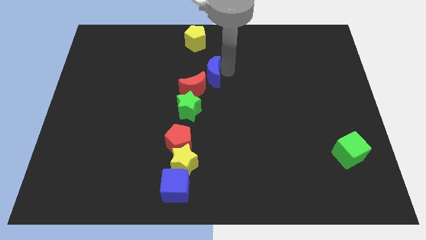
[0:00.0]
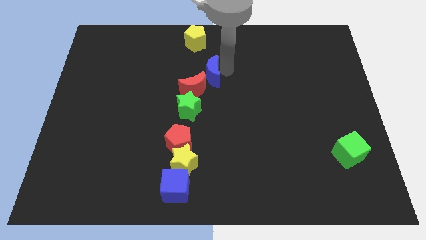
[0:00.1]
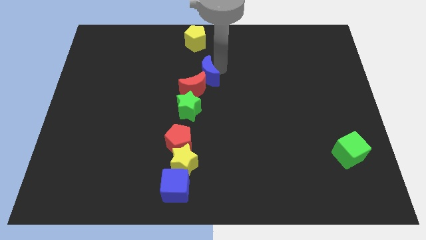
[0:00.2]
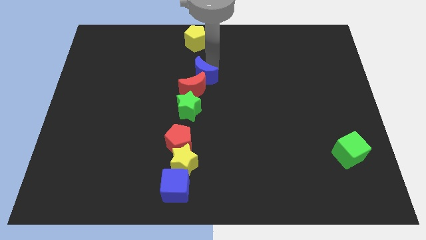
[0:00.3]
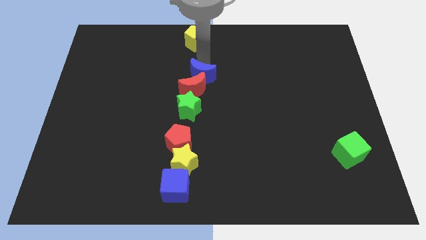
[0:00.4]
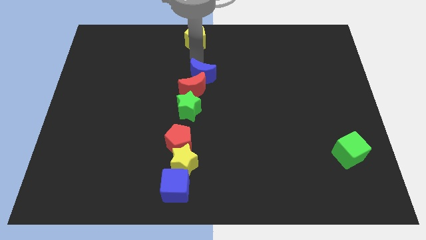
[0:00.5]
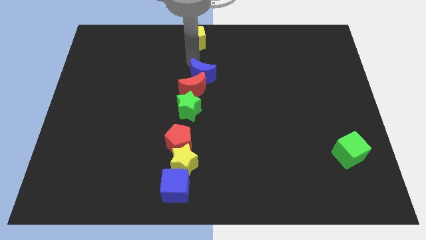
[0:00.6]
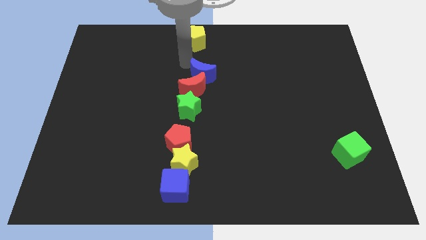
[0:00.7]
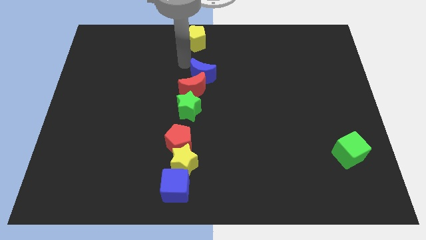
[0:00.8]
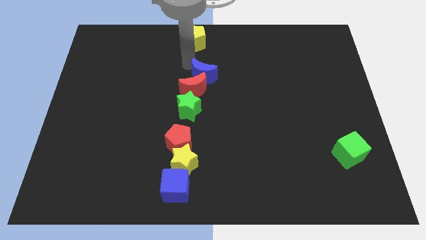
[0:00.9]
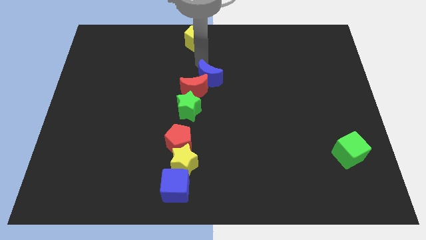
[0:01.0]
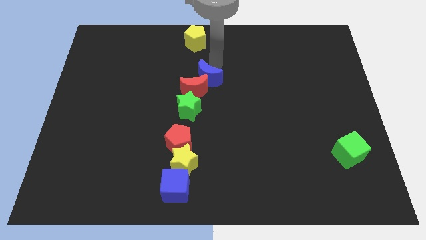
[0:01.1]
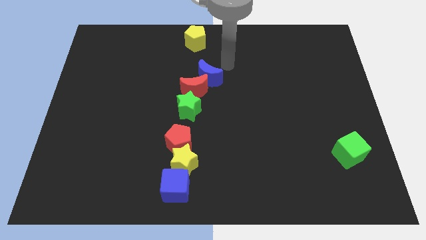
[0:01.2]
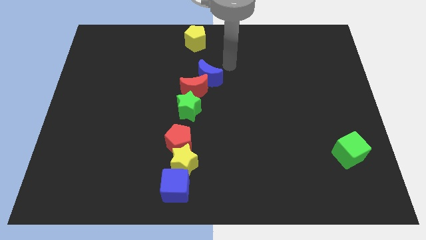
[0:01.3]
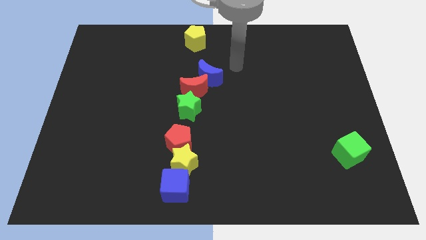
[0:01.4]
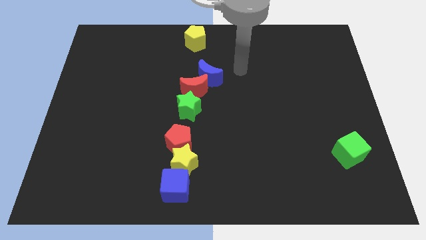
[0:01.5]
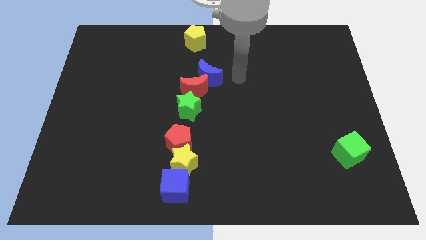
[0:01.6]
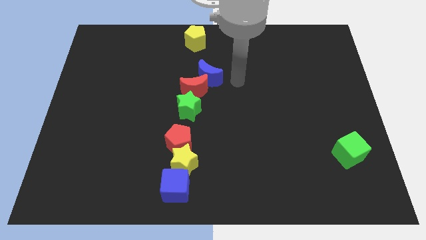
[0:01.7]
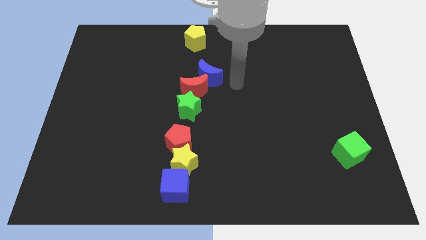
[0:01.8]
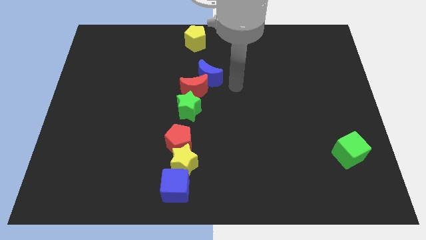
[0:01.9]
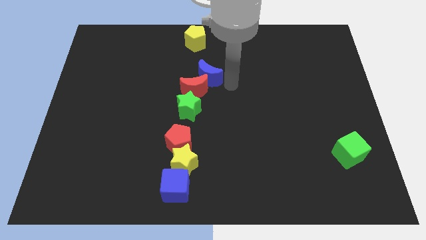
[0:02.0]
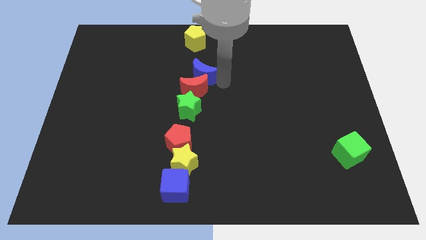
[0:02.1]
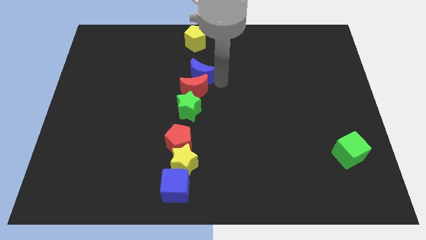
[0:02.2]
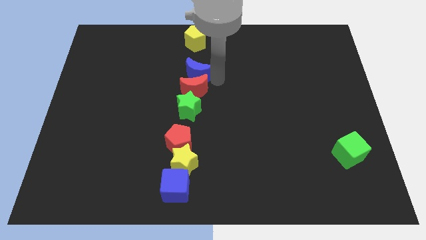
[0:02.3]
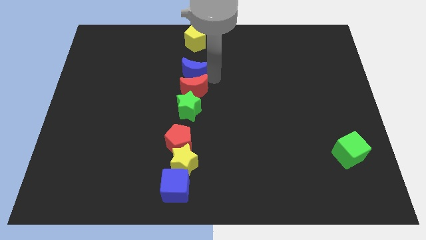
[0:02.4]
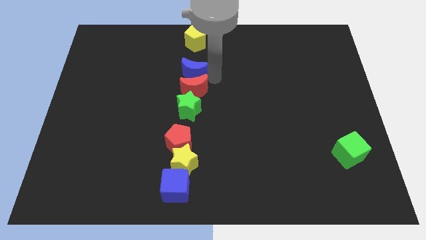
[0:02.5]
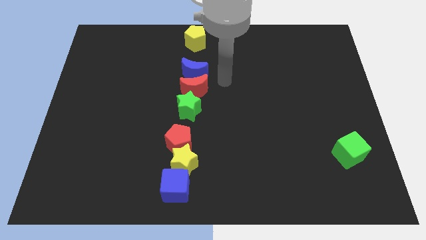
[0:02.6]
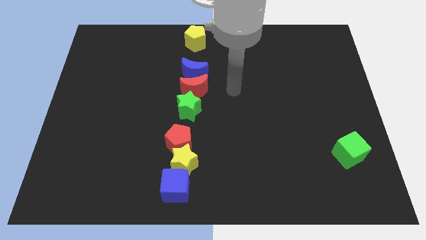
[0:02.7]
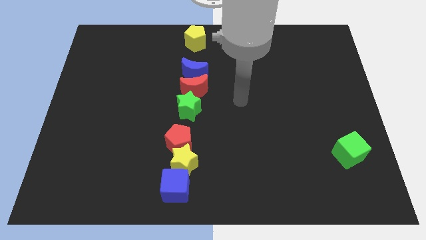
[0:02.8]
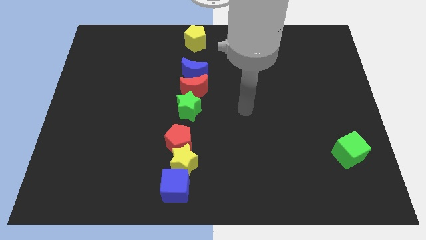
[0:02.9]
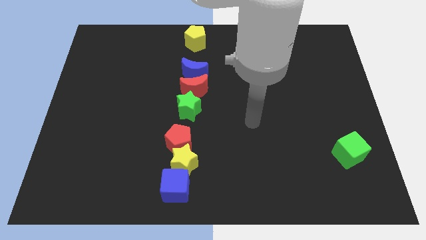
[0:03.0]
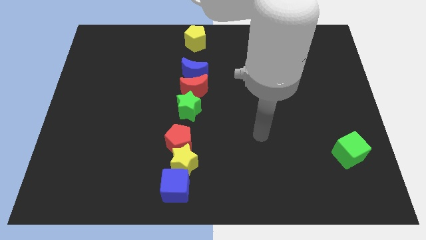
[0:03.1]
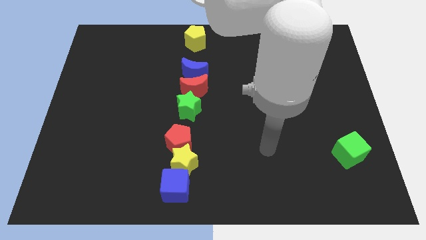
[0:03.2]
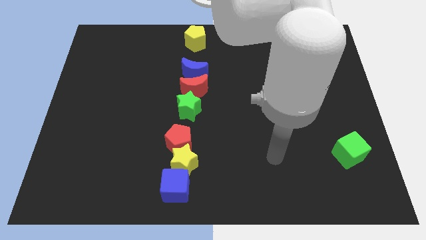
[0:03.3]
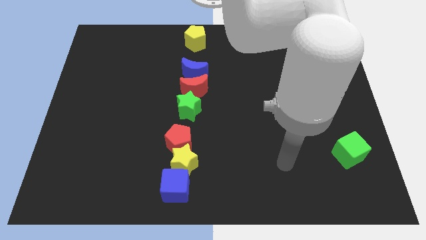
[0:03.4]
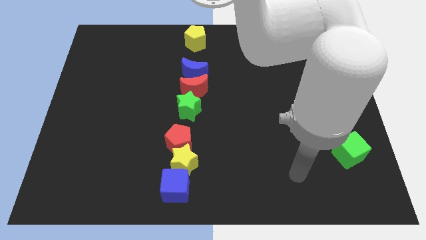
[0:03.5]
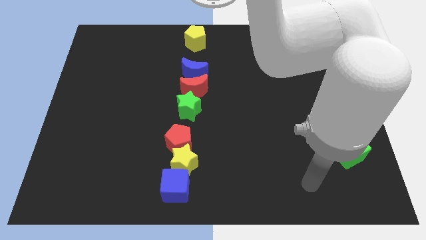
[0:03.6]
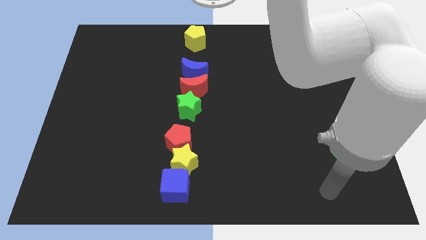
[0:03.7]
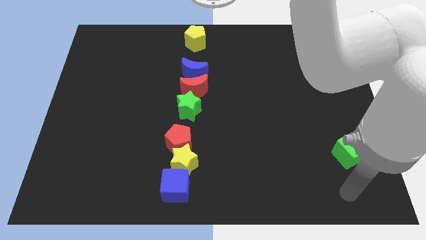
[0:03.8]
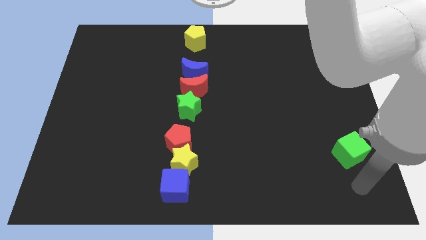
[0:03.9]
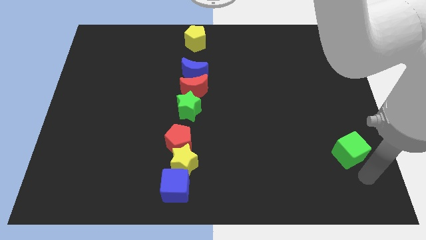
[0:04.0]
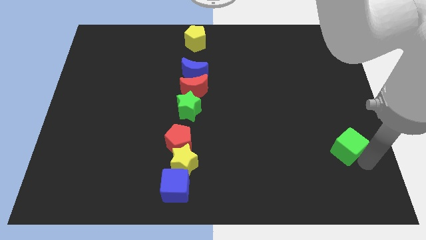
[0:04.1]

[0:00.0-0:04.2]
push your arm right to the green cube

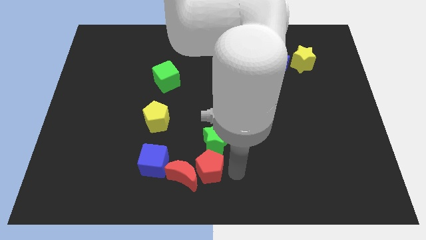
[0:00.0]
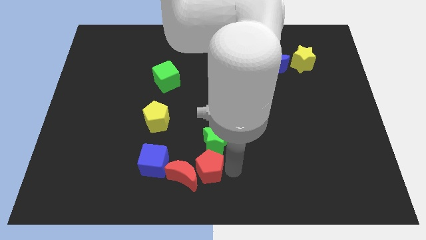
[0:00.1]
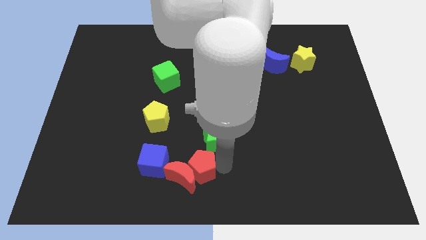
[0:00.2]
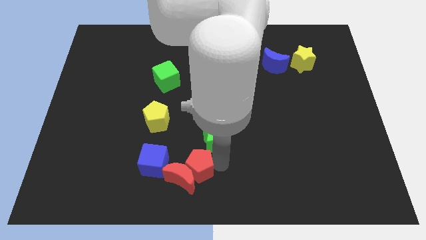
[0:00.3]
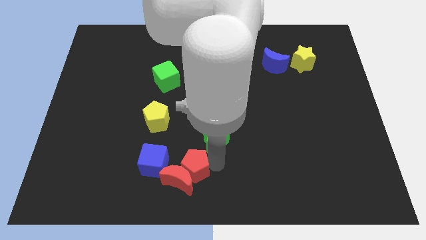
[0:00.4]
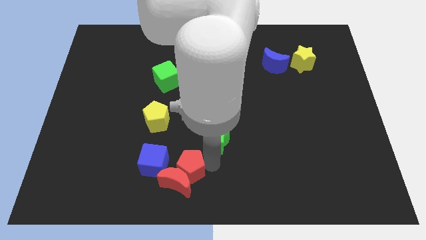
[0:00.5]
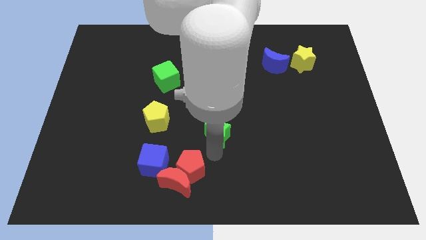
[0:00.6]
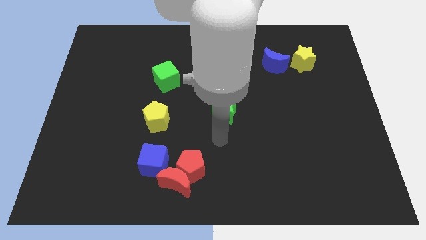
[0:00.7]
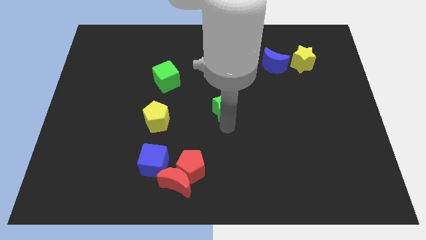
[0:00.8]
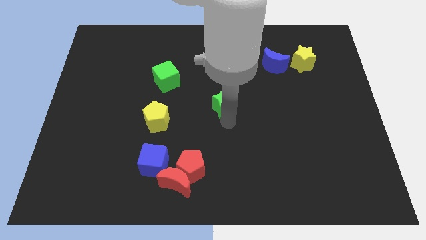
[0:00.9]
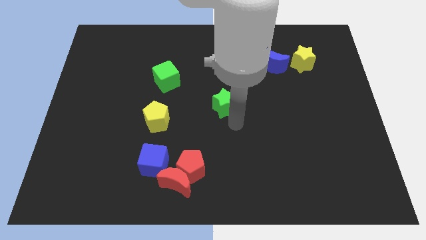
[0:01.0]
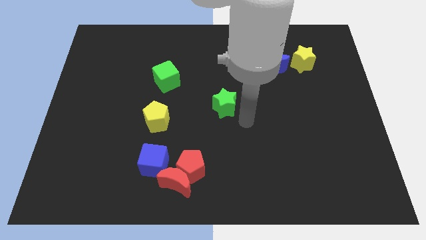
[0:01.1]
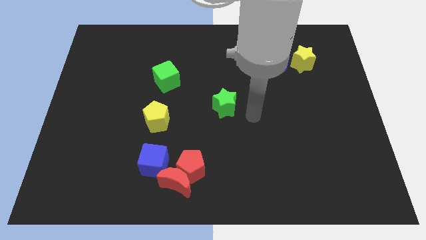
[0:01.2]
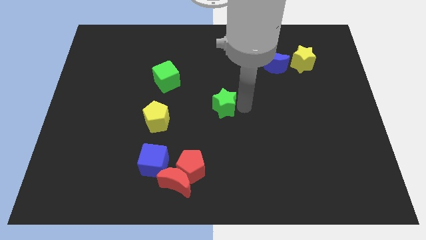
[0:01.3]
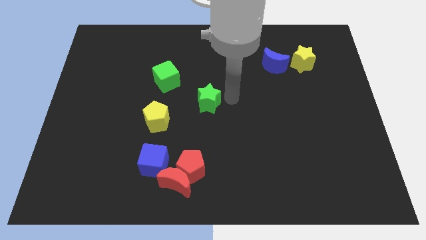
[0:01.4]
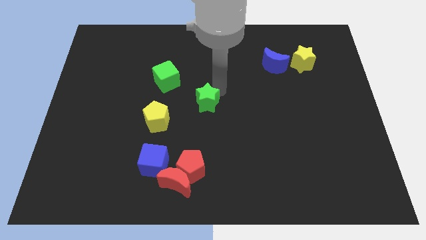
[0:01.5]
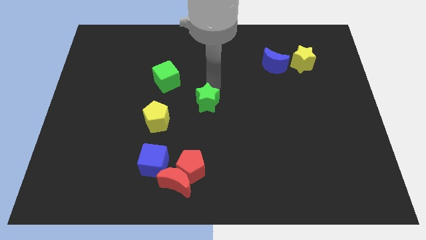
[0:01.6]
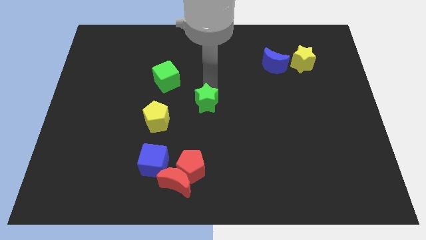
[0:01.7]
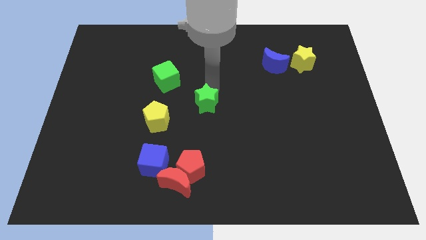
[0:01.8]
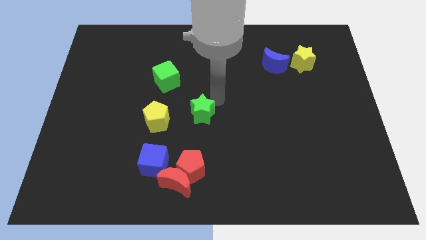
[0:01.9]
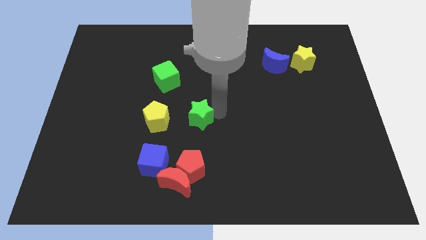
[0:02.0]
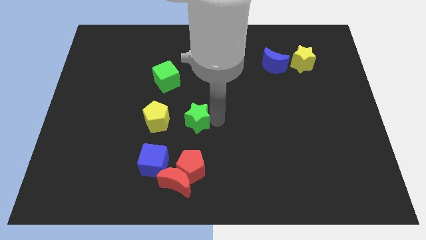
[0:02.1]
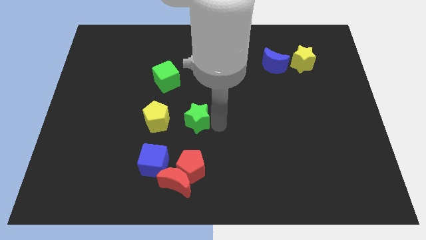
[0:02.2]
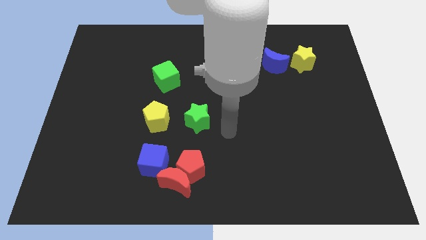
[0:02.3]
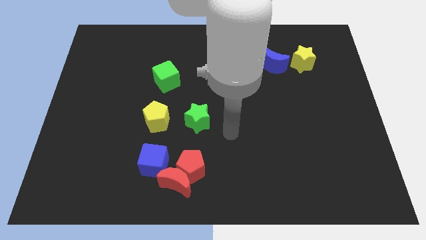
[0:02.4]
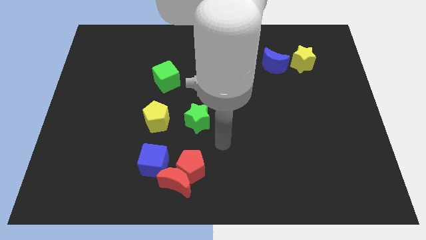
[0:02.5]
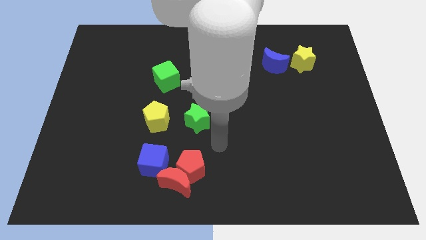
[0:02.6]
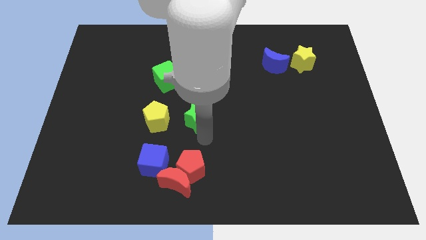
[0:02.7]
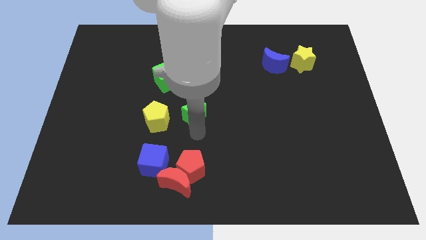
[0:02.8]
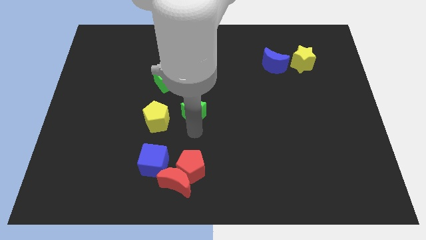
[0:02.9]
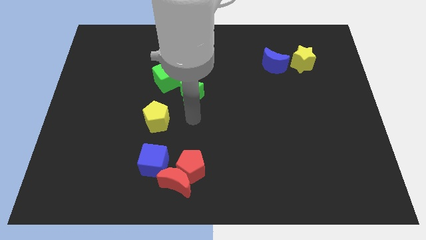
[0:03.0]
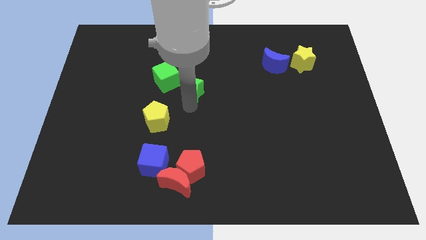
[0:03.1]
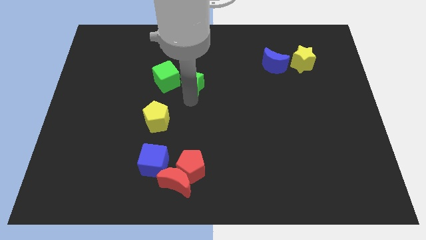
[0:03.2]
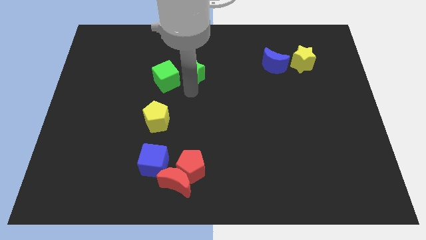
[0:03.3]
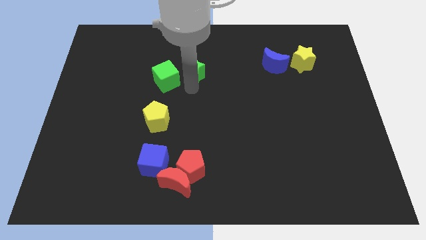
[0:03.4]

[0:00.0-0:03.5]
move green star right beside the green cube

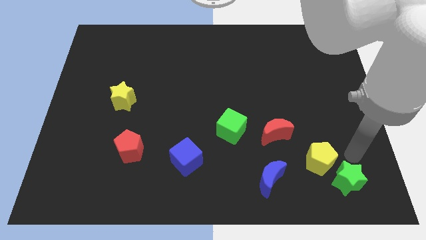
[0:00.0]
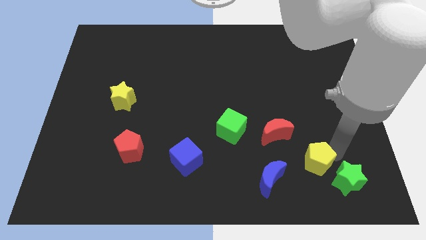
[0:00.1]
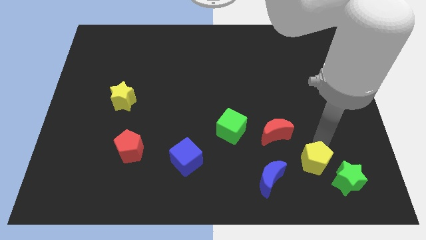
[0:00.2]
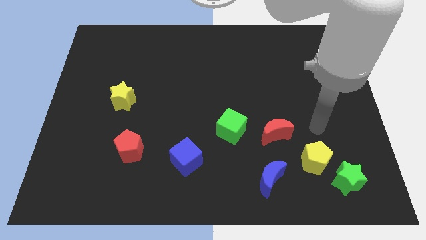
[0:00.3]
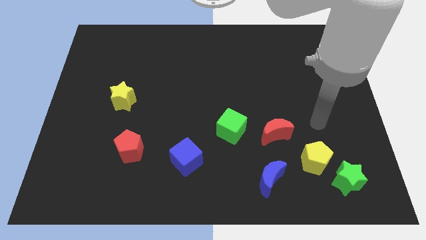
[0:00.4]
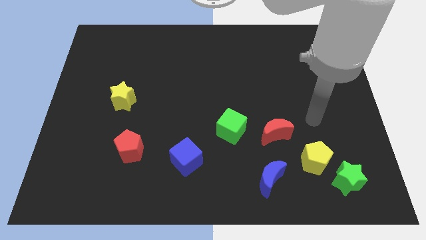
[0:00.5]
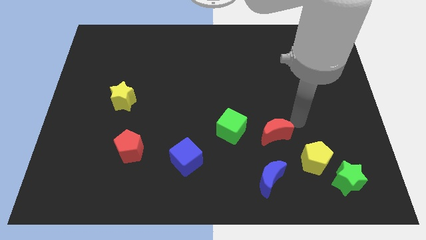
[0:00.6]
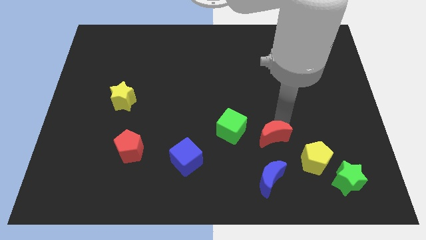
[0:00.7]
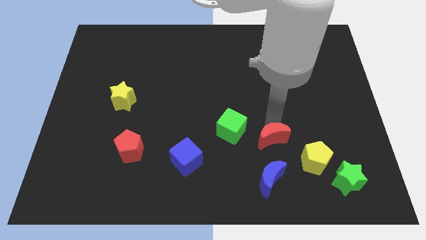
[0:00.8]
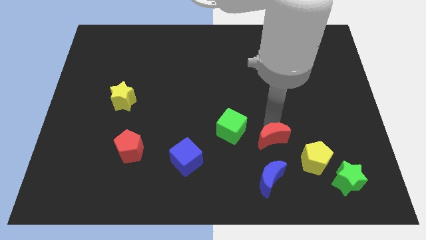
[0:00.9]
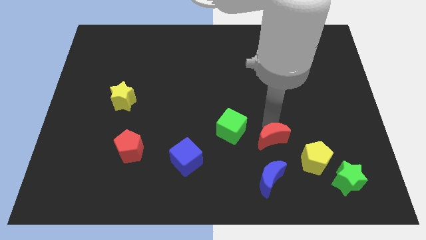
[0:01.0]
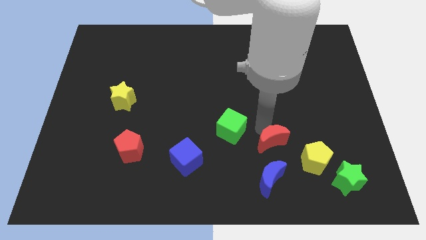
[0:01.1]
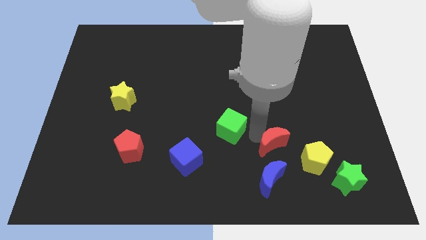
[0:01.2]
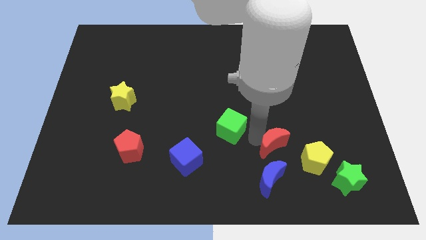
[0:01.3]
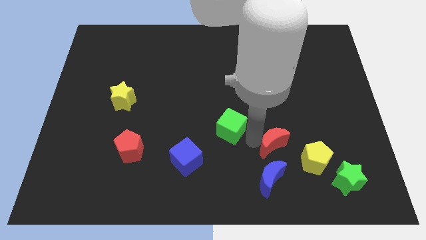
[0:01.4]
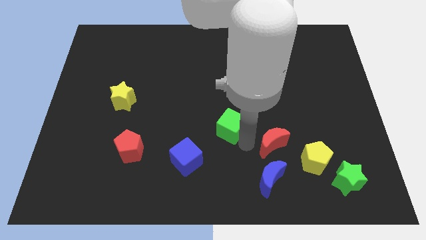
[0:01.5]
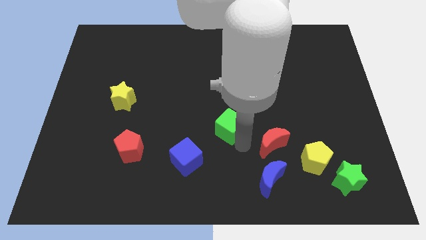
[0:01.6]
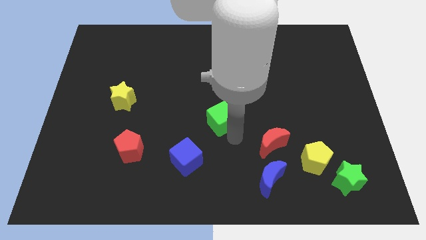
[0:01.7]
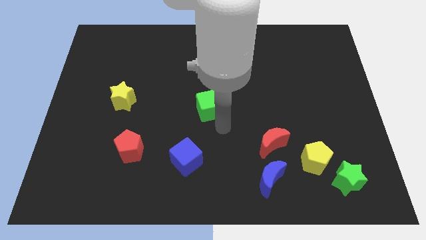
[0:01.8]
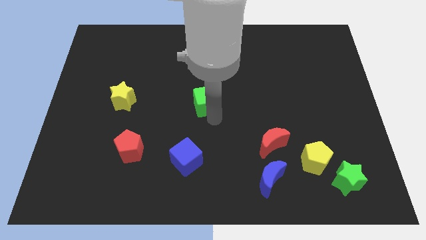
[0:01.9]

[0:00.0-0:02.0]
push the green cube to the center of the board
